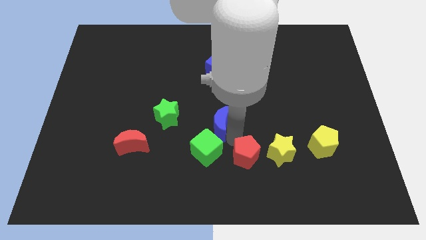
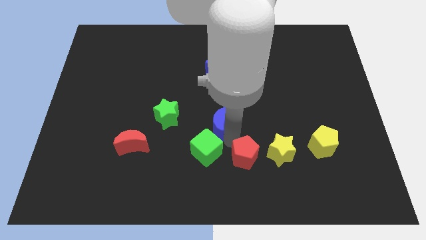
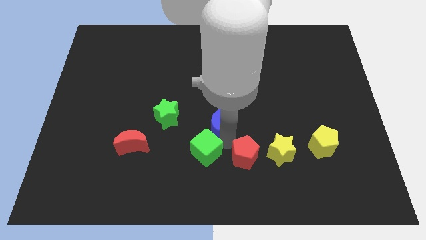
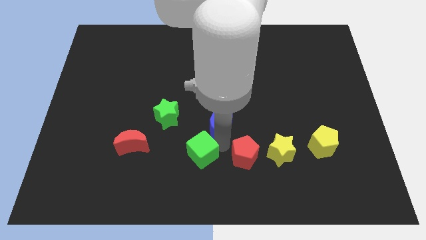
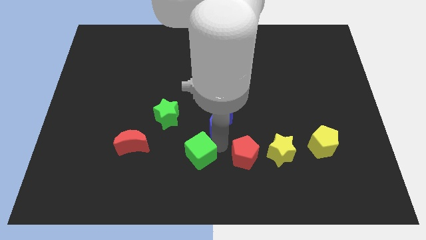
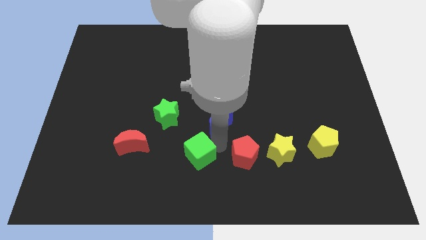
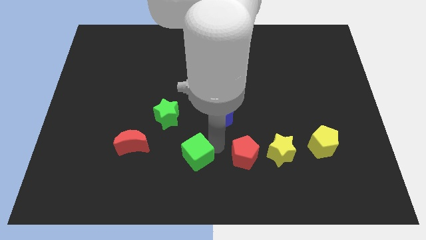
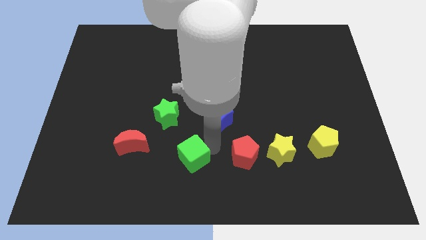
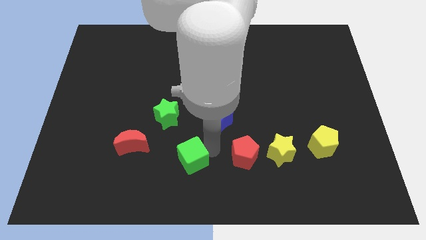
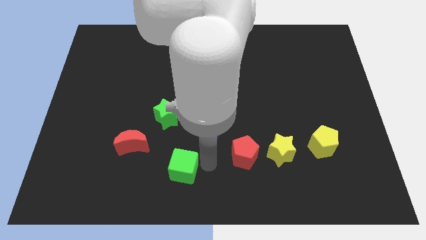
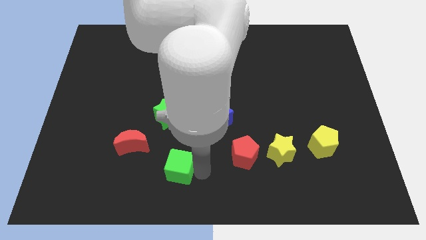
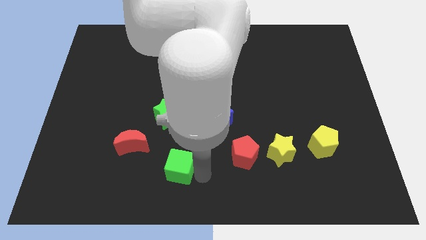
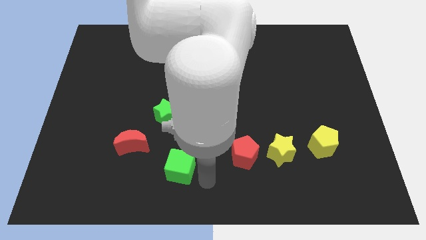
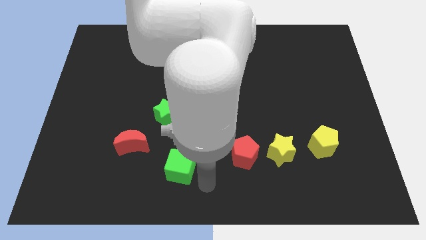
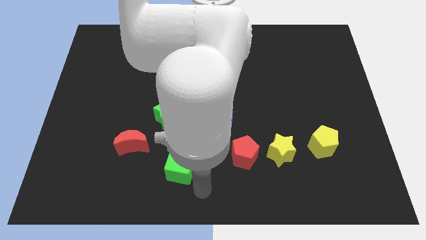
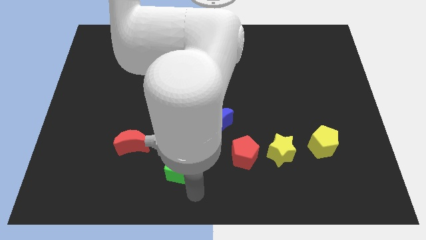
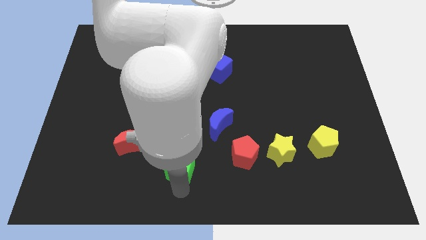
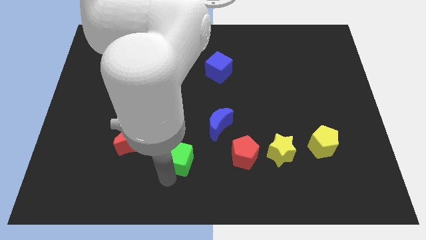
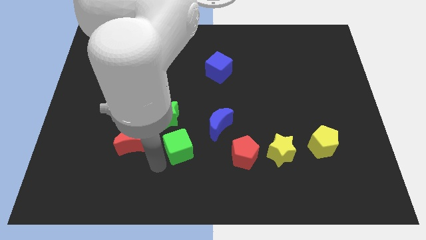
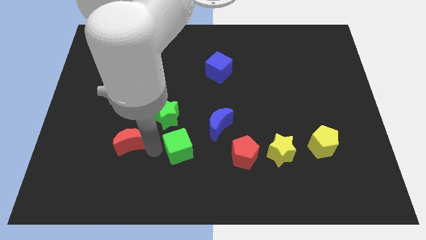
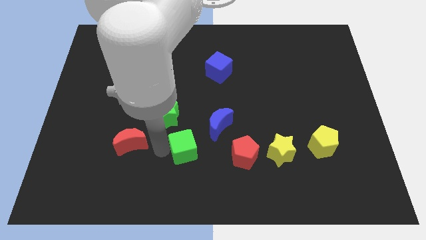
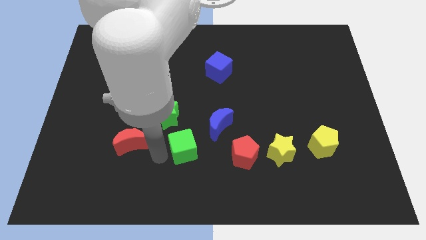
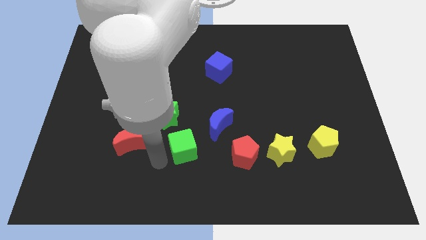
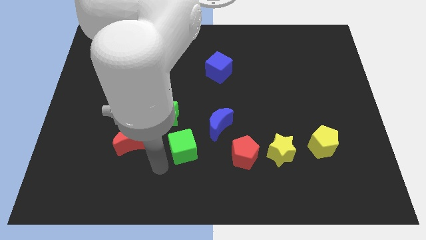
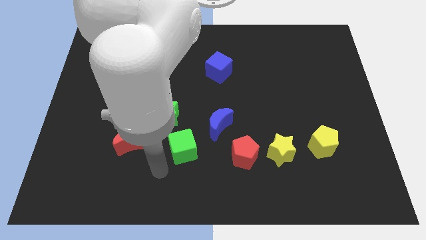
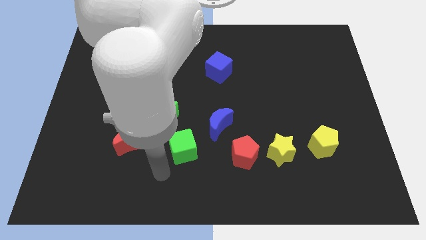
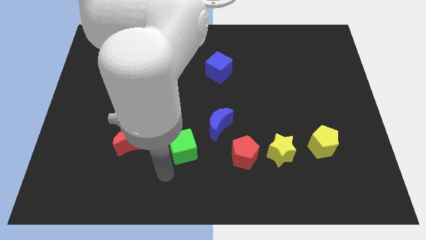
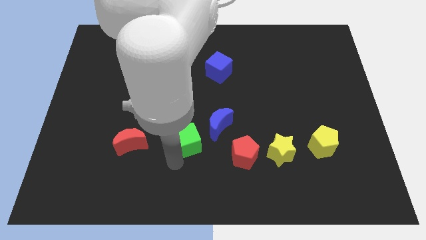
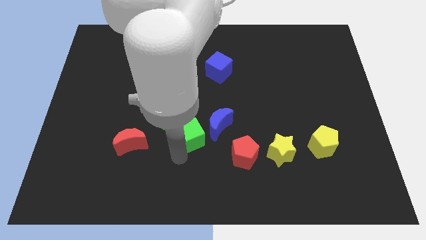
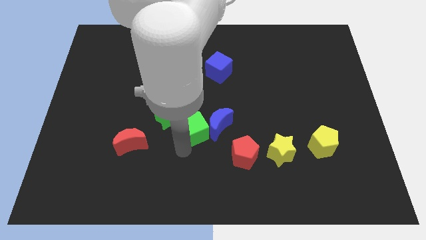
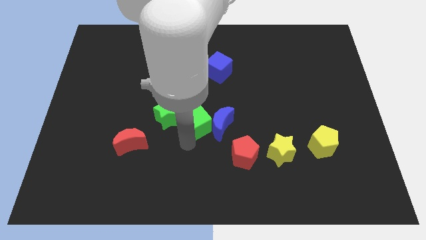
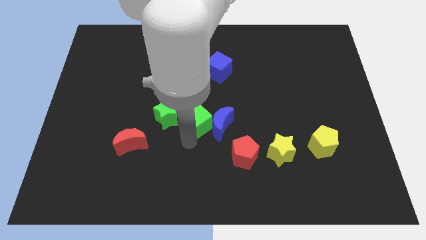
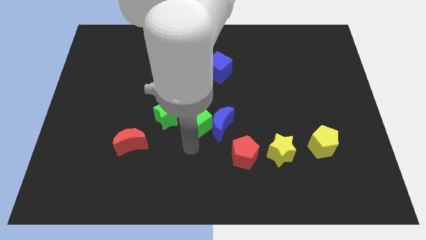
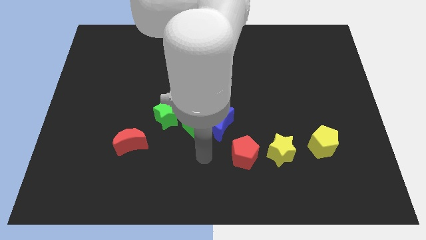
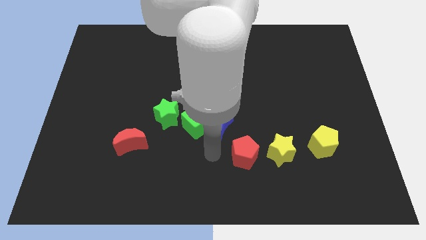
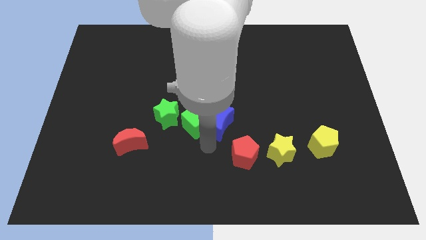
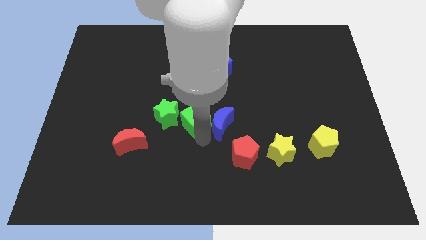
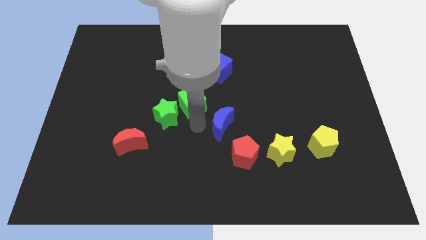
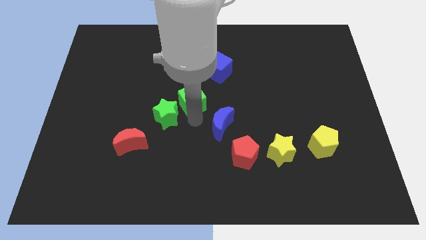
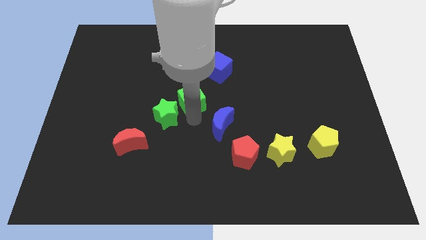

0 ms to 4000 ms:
move the green square diagonally to the green star

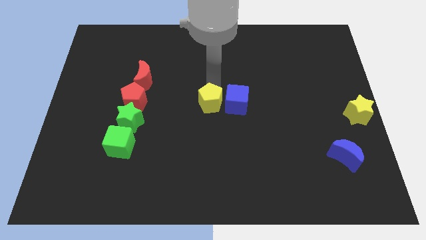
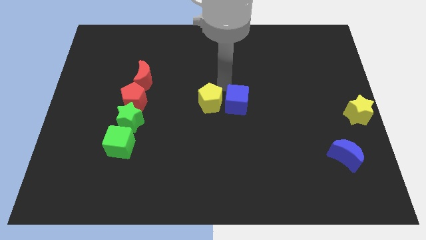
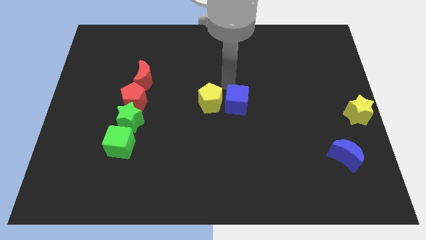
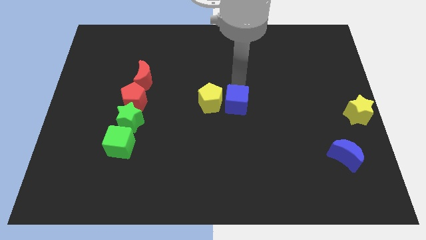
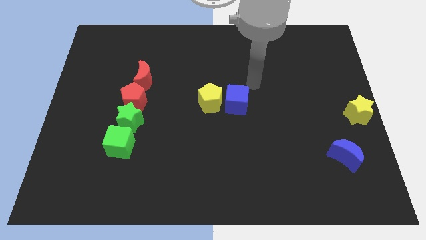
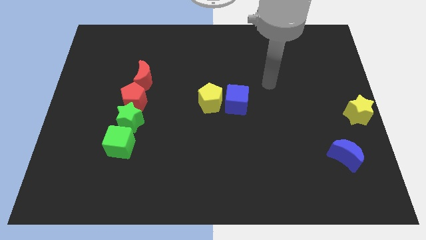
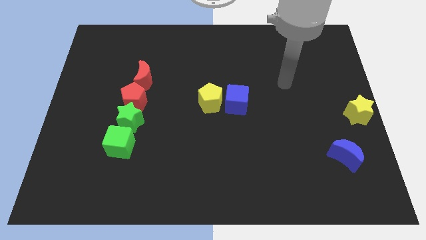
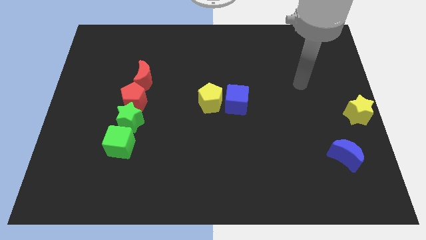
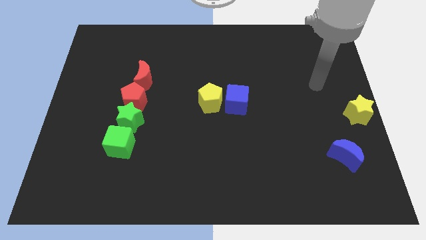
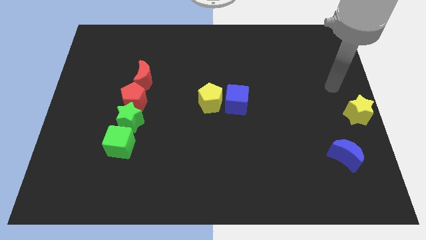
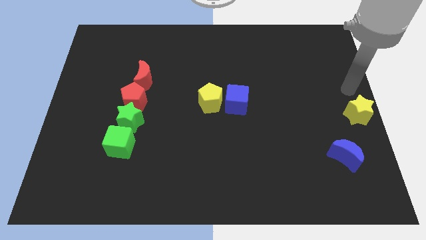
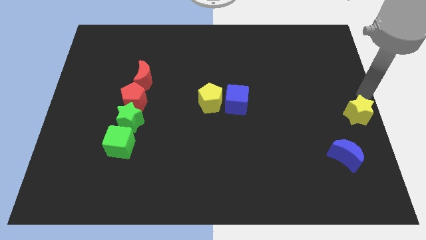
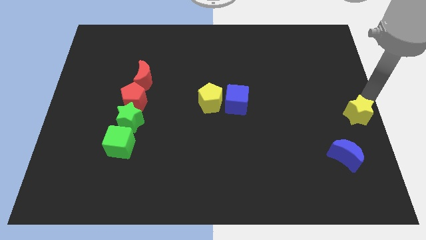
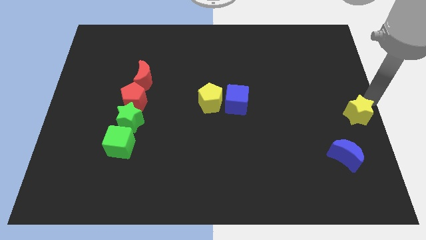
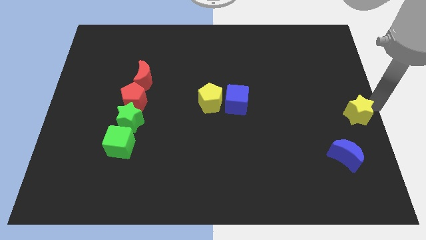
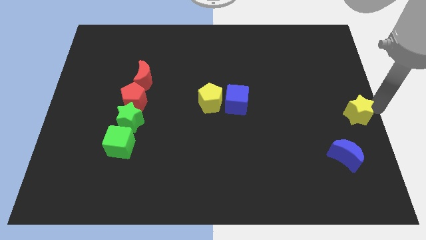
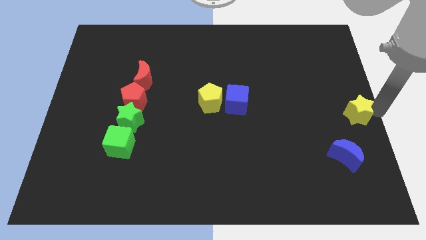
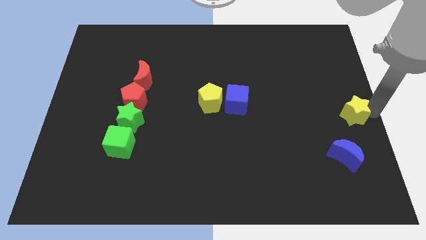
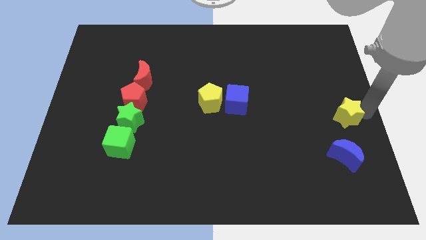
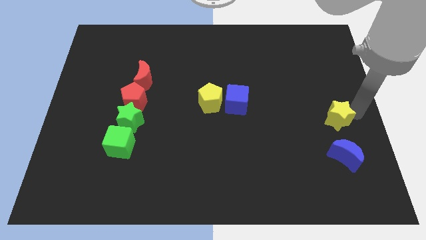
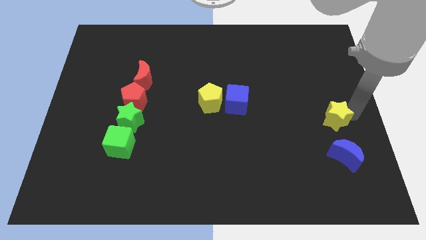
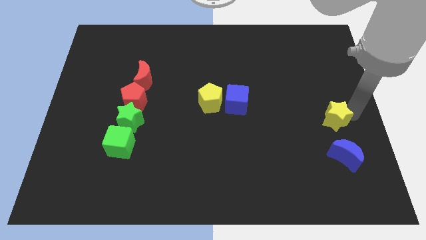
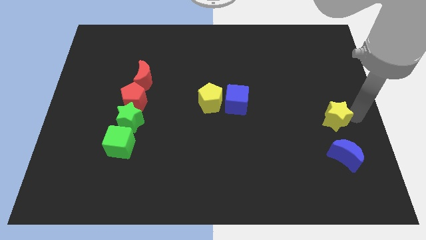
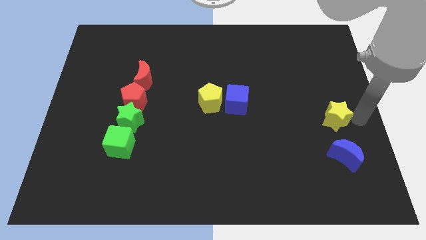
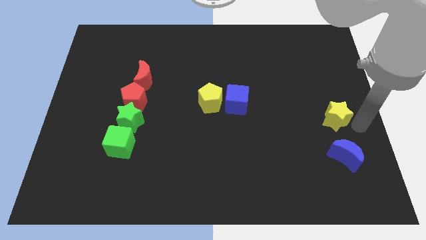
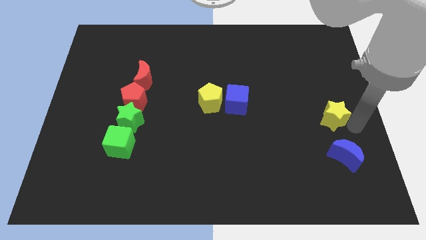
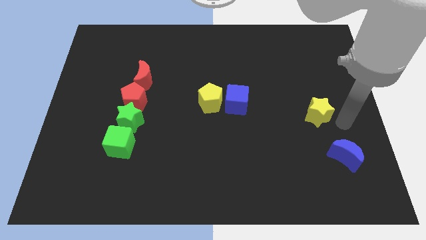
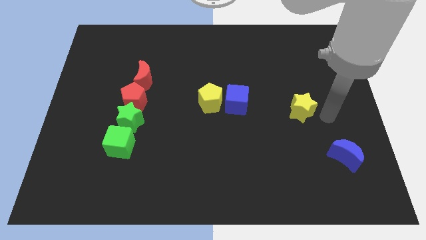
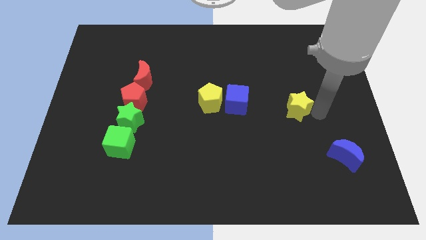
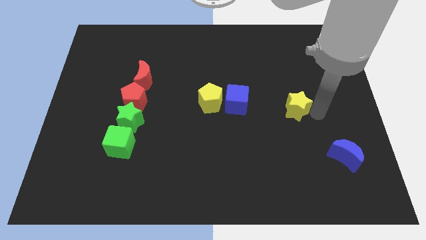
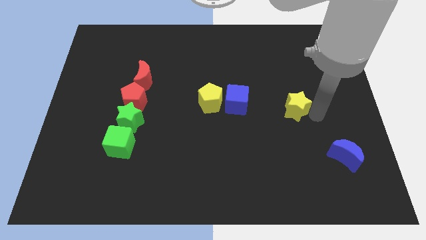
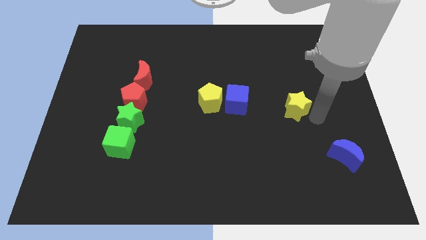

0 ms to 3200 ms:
move the yellow star diagonal to the right side of the blue cube

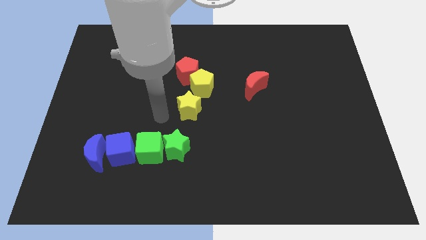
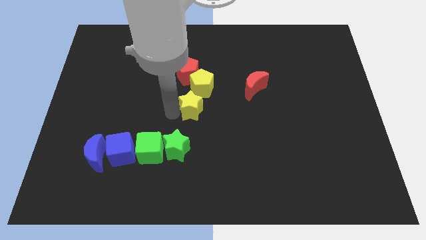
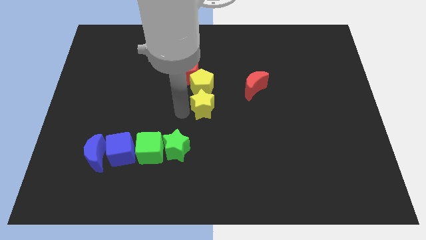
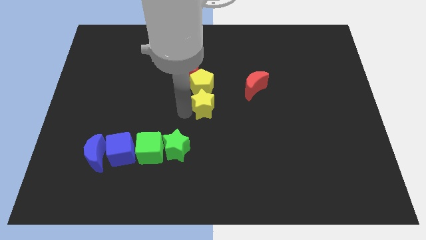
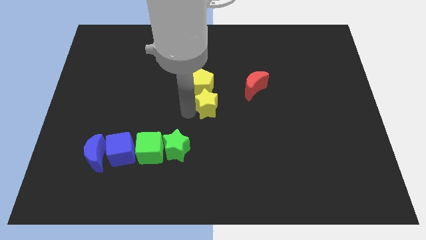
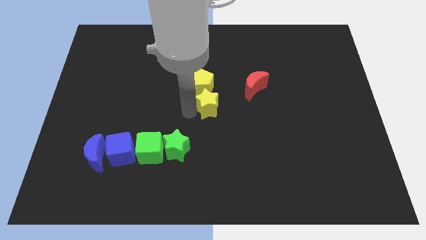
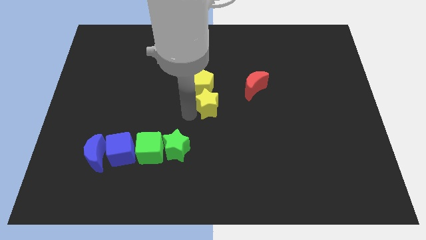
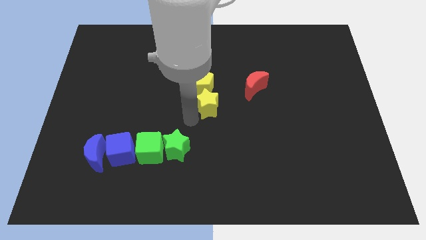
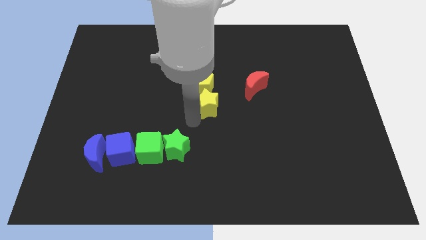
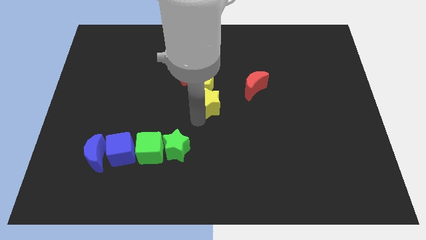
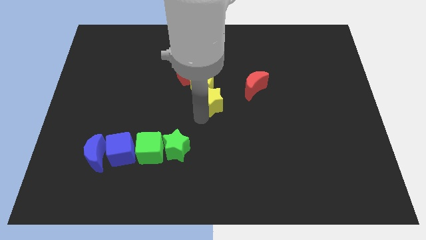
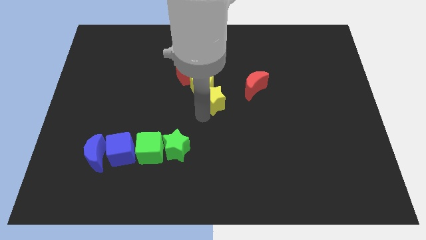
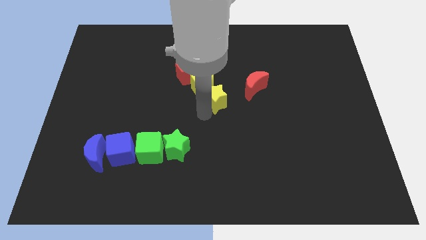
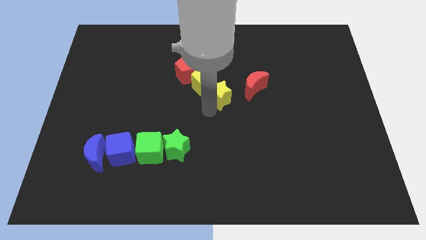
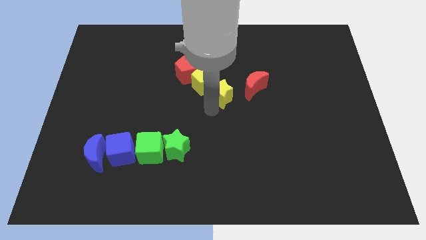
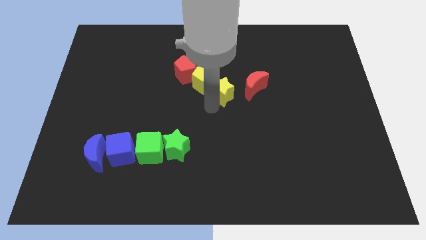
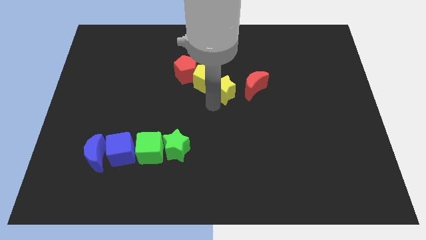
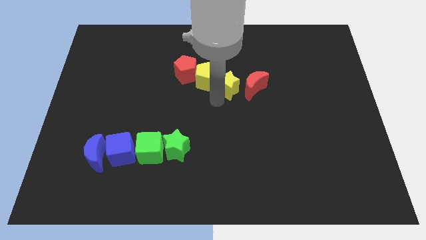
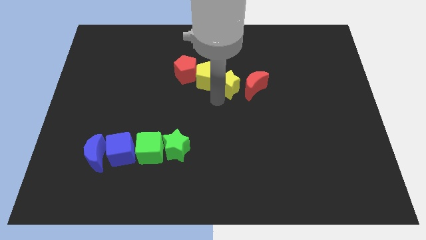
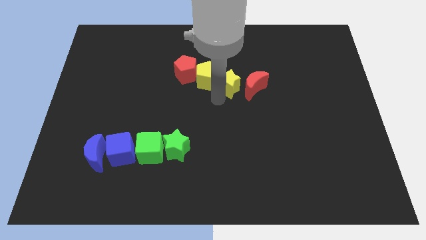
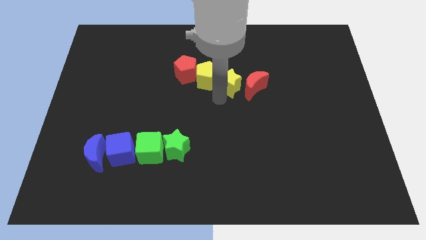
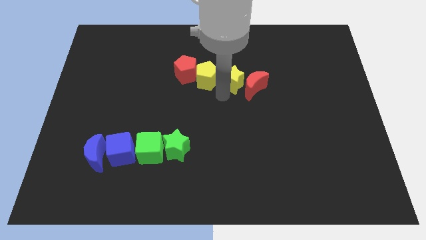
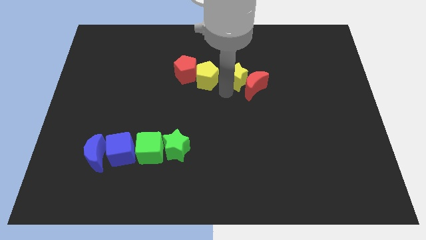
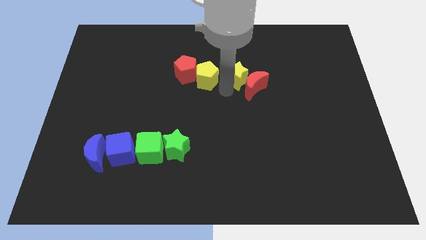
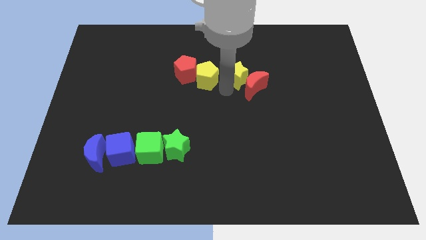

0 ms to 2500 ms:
move the yellow star right to the yellow pentagon
